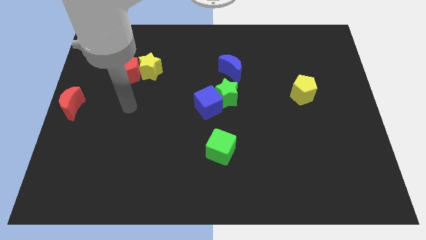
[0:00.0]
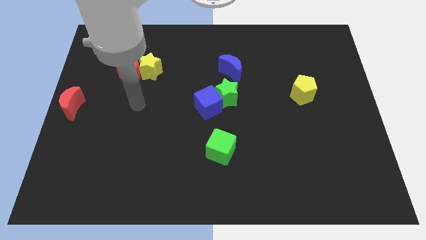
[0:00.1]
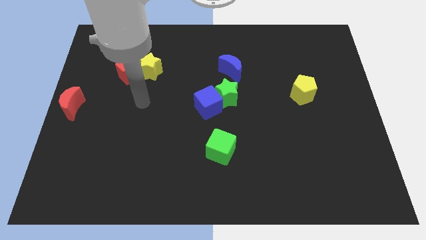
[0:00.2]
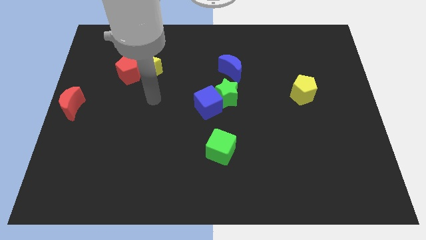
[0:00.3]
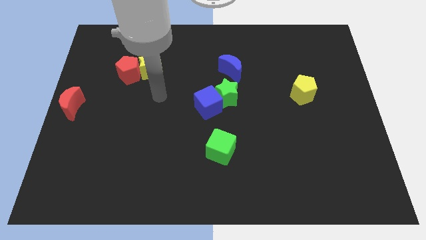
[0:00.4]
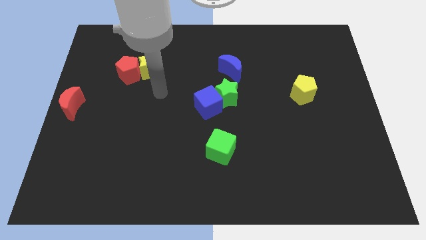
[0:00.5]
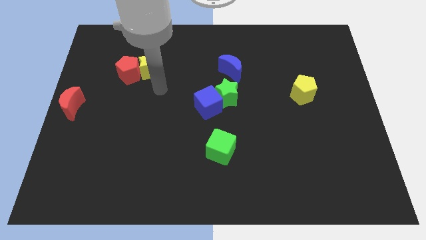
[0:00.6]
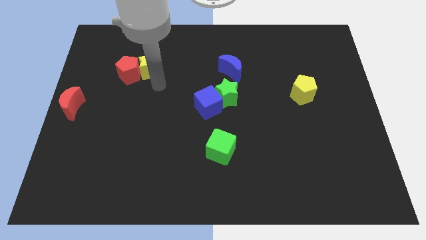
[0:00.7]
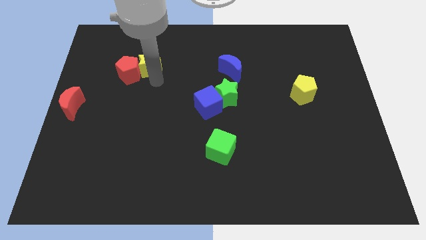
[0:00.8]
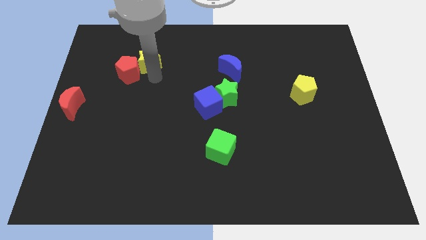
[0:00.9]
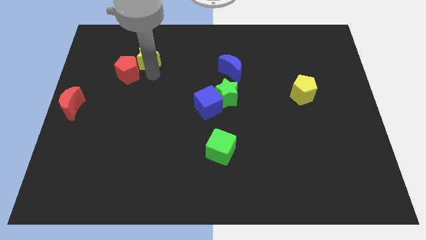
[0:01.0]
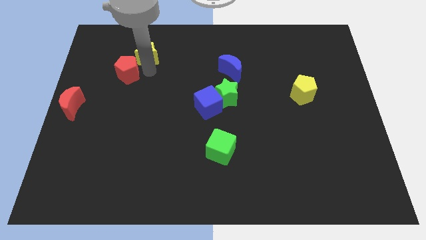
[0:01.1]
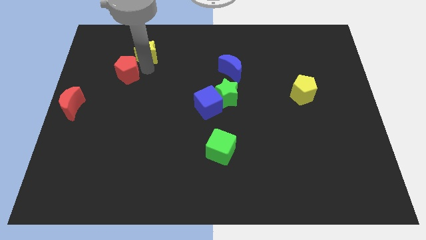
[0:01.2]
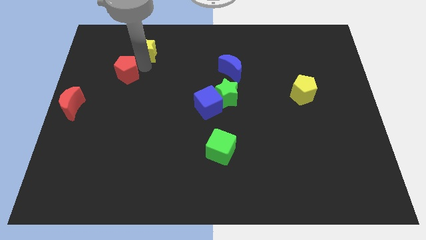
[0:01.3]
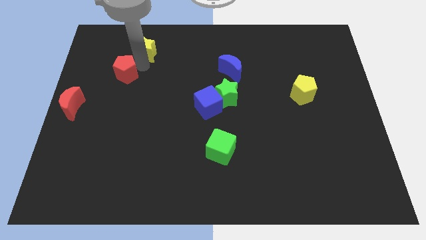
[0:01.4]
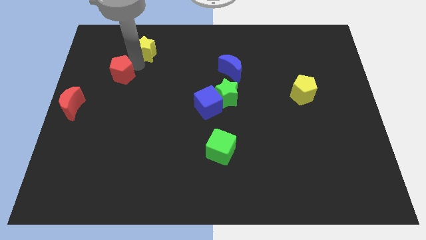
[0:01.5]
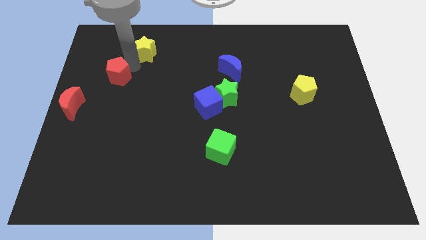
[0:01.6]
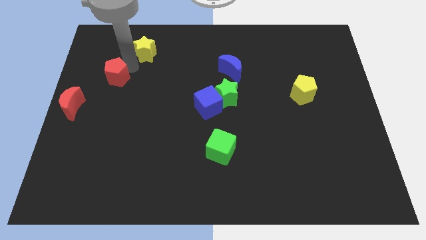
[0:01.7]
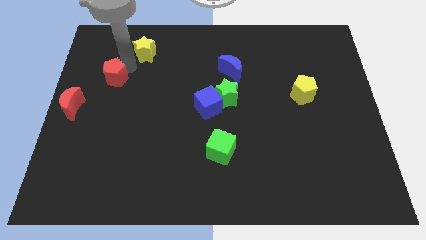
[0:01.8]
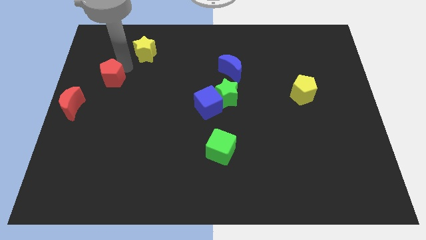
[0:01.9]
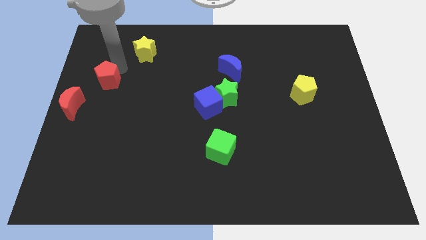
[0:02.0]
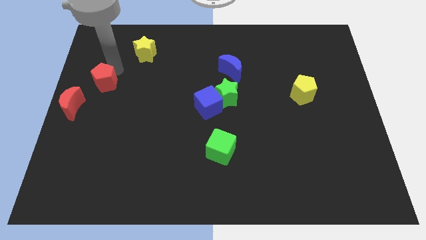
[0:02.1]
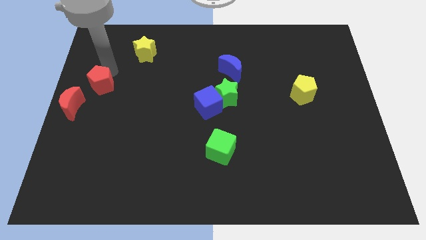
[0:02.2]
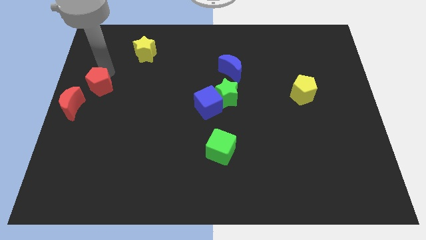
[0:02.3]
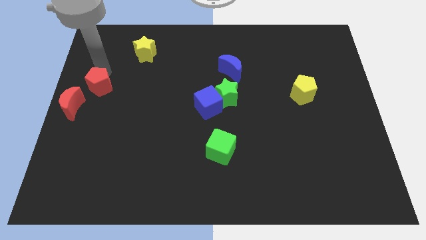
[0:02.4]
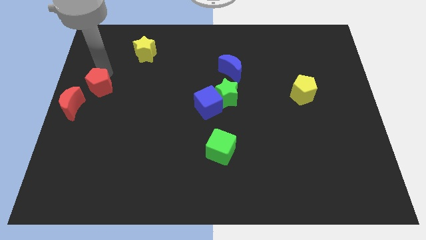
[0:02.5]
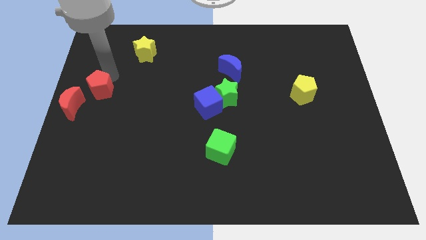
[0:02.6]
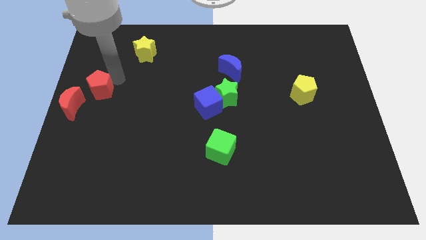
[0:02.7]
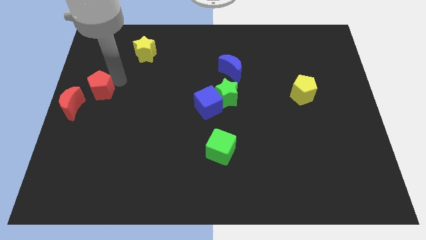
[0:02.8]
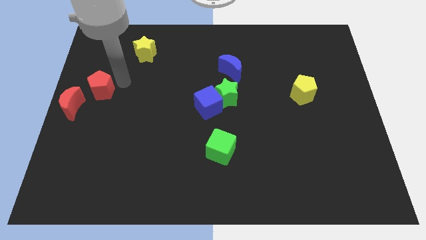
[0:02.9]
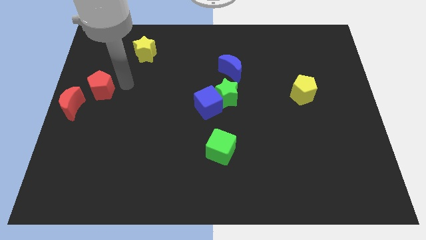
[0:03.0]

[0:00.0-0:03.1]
move the red pentagon near to the red moon

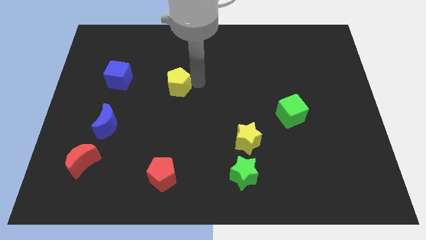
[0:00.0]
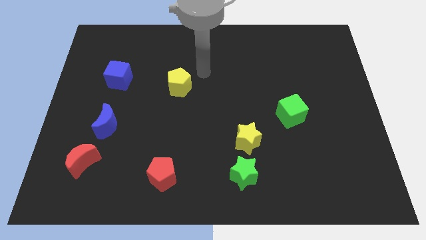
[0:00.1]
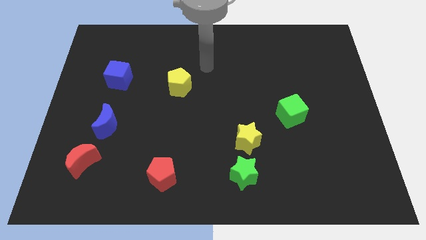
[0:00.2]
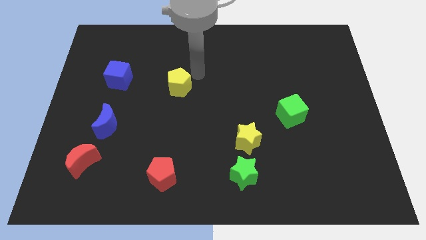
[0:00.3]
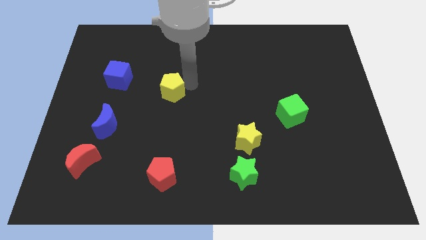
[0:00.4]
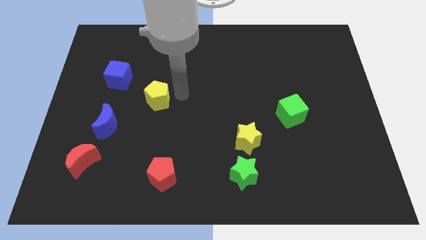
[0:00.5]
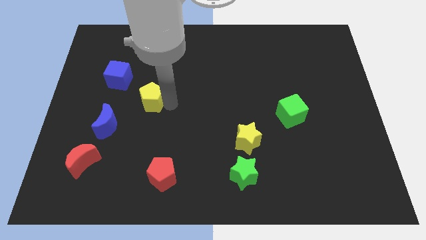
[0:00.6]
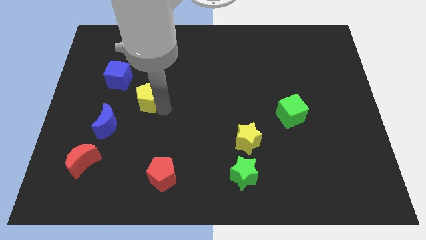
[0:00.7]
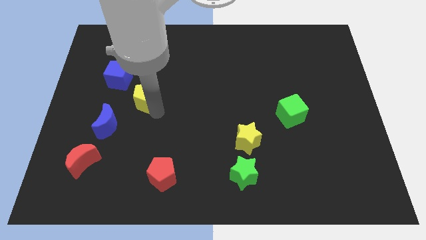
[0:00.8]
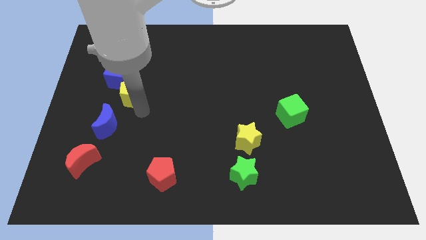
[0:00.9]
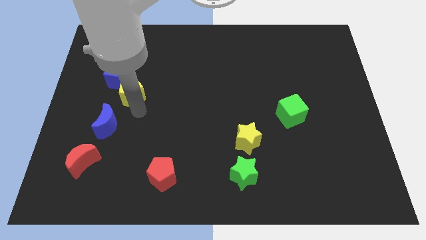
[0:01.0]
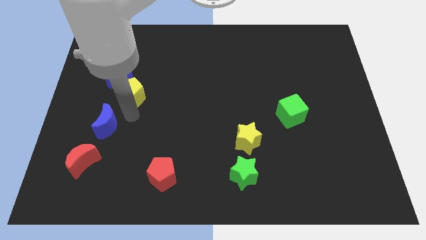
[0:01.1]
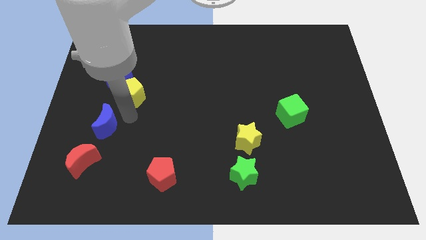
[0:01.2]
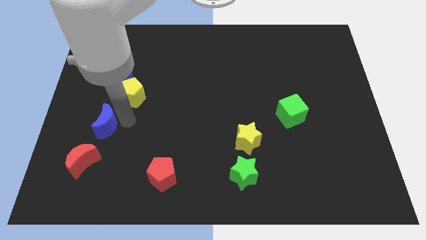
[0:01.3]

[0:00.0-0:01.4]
put the yellow pentagon at the bottom right of the blue cube

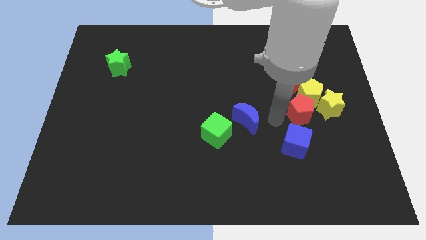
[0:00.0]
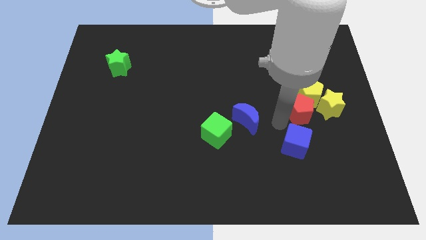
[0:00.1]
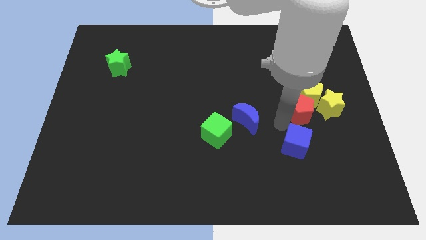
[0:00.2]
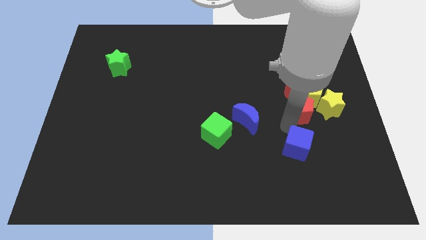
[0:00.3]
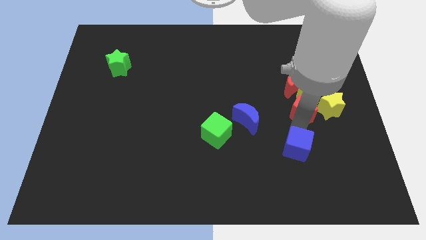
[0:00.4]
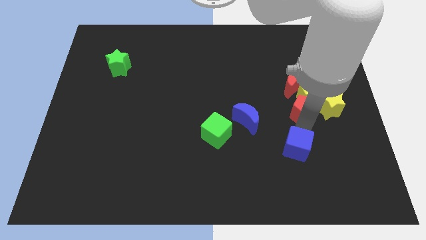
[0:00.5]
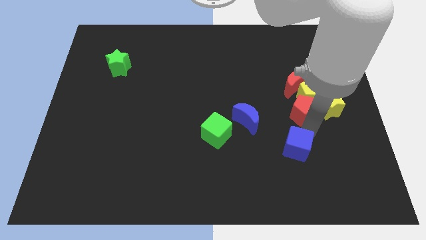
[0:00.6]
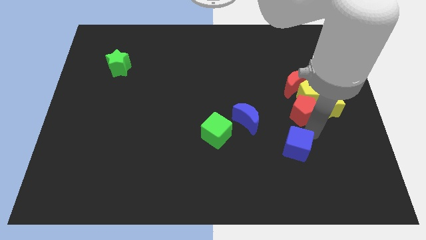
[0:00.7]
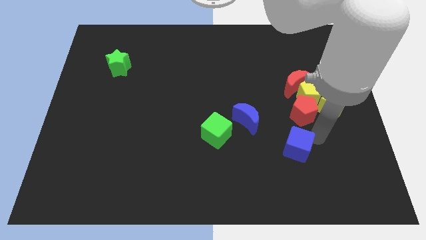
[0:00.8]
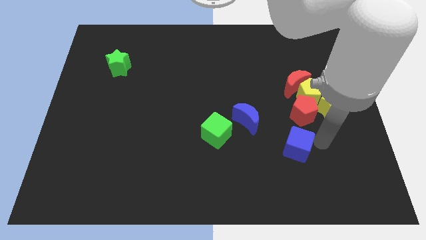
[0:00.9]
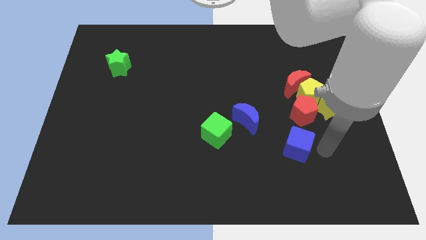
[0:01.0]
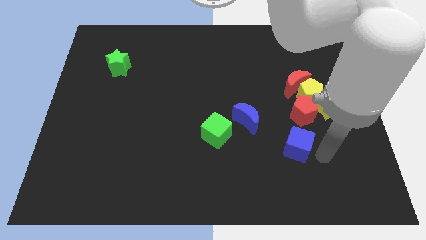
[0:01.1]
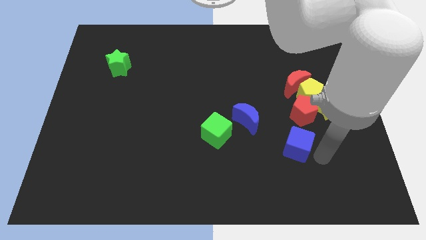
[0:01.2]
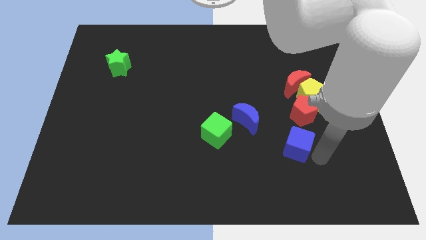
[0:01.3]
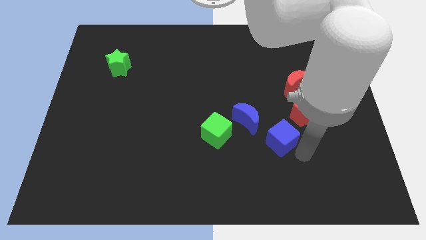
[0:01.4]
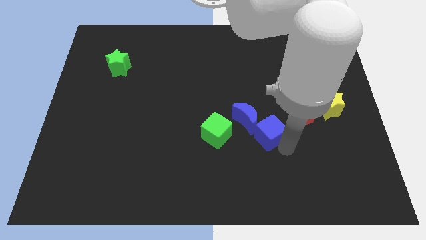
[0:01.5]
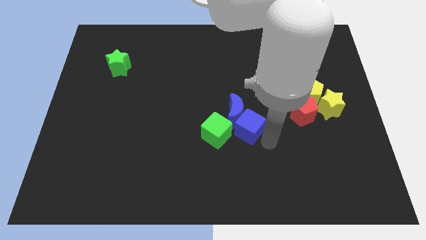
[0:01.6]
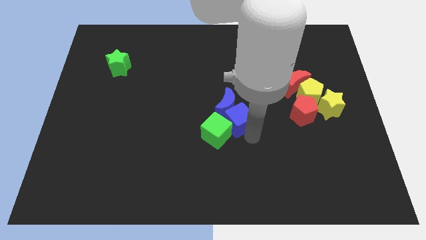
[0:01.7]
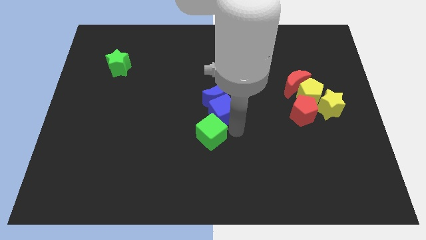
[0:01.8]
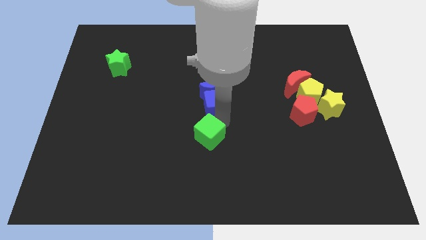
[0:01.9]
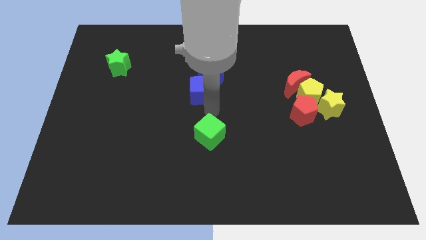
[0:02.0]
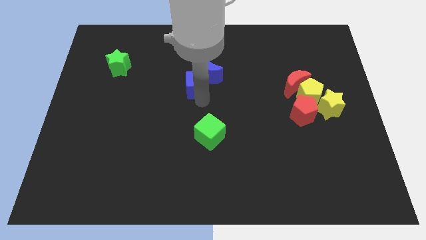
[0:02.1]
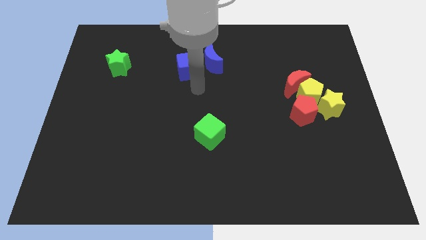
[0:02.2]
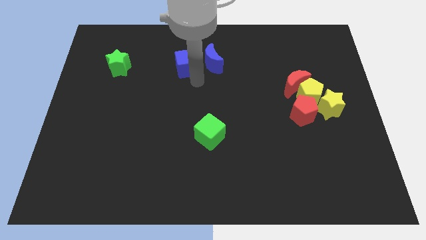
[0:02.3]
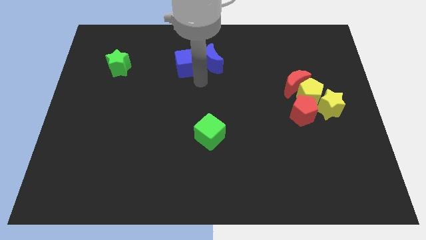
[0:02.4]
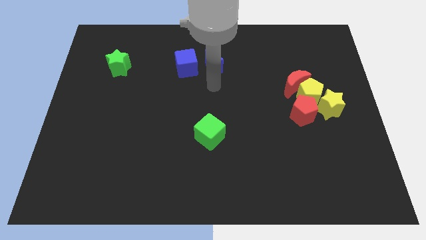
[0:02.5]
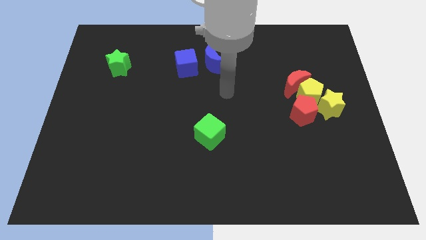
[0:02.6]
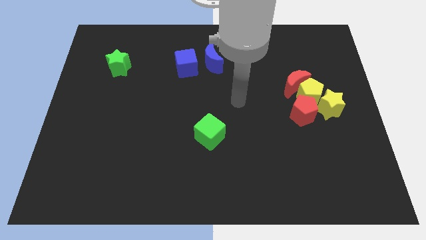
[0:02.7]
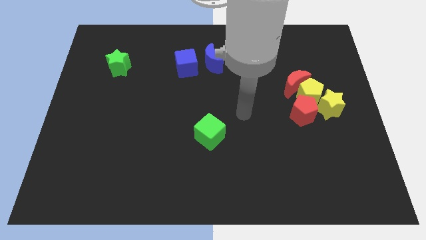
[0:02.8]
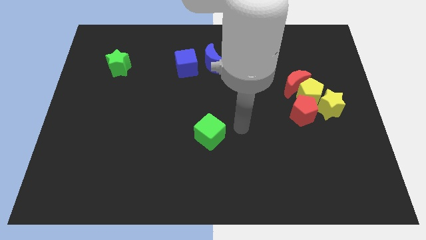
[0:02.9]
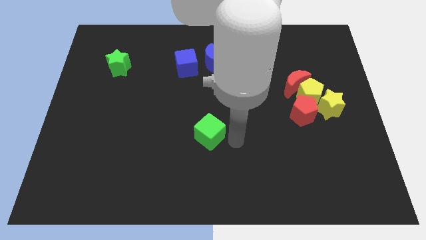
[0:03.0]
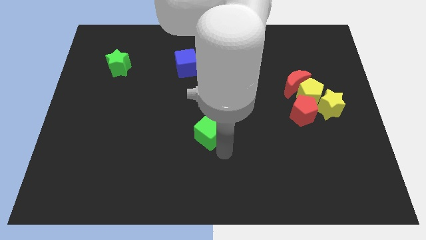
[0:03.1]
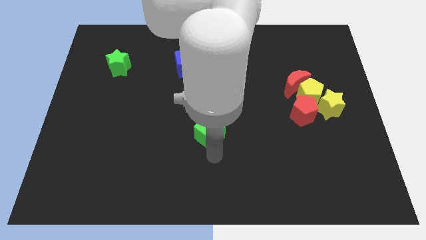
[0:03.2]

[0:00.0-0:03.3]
push the blue moon and blue cube to the right side of the green star

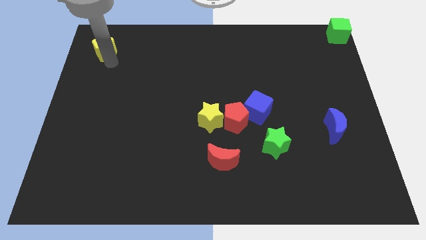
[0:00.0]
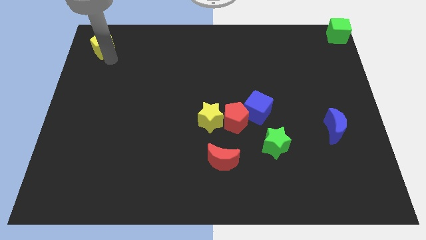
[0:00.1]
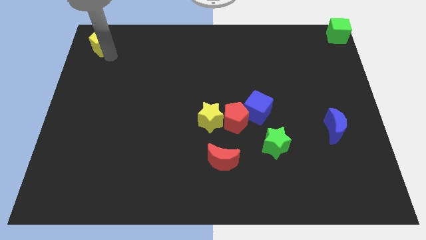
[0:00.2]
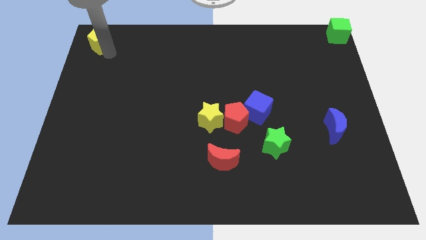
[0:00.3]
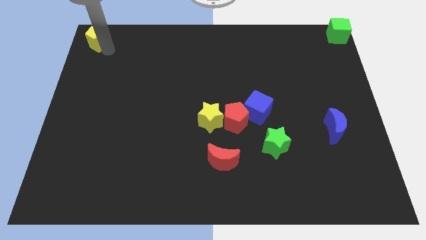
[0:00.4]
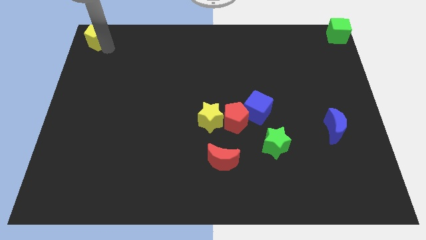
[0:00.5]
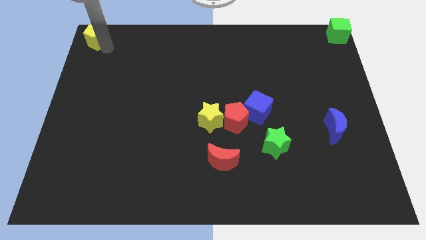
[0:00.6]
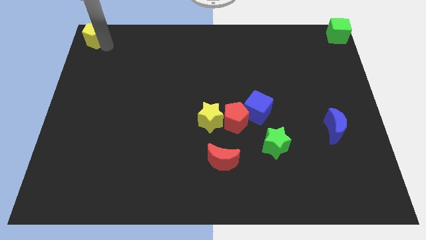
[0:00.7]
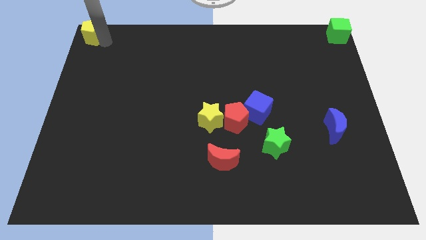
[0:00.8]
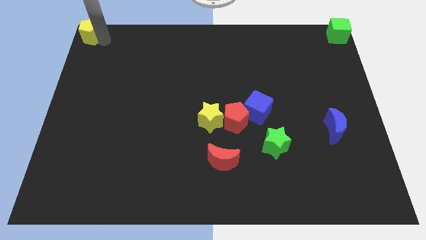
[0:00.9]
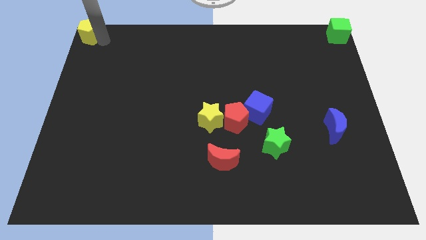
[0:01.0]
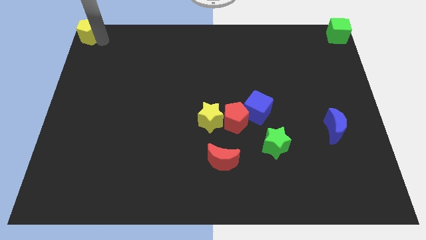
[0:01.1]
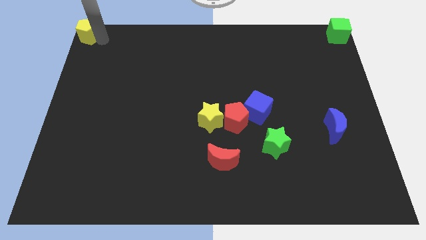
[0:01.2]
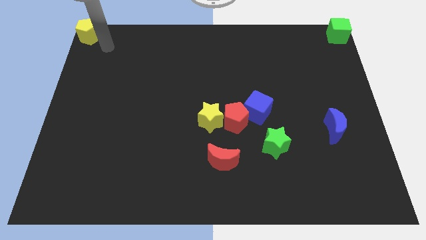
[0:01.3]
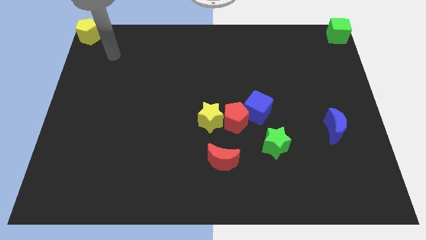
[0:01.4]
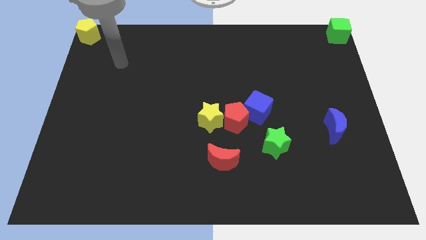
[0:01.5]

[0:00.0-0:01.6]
push the yellow pentagon to the top left corner of the board
